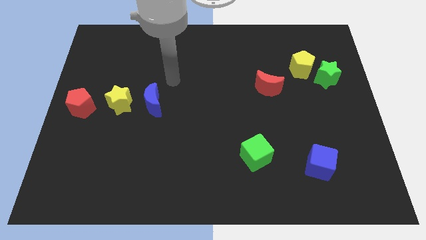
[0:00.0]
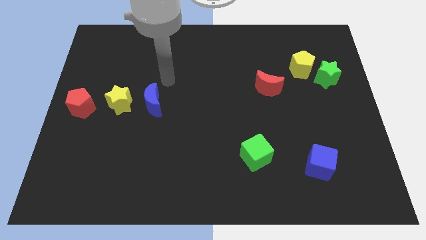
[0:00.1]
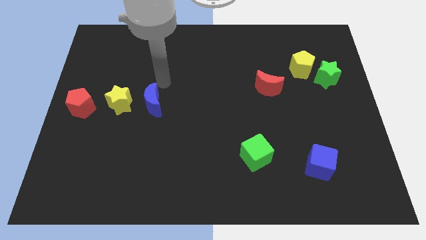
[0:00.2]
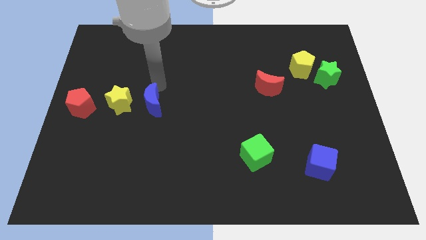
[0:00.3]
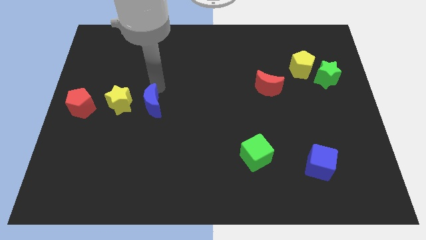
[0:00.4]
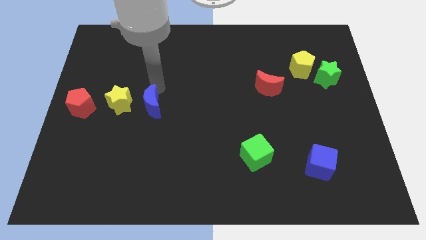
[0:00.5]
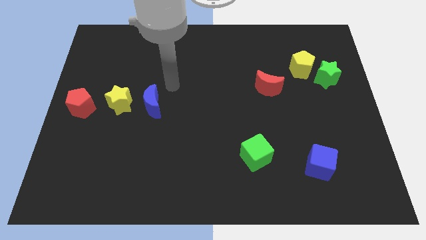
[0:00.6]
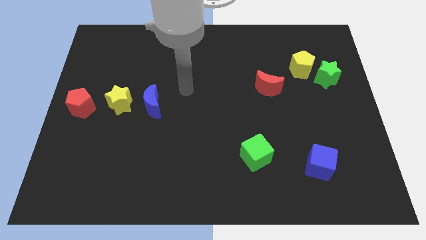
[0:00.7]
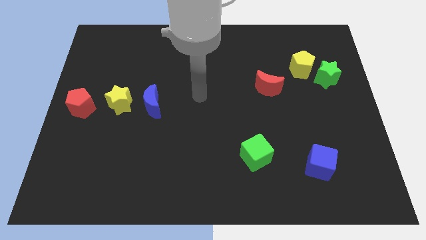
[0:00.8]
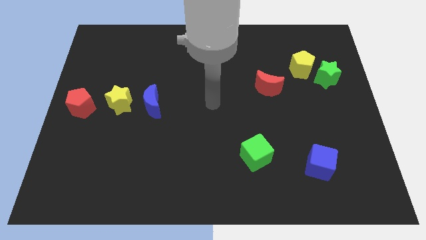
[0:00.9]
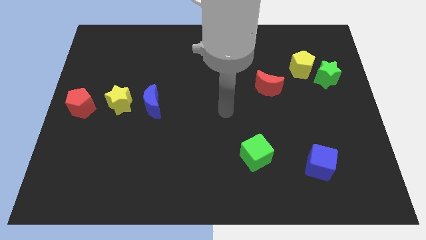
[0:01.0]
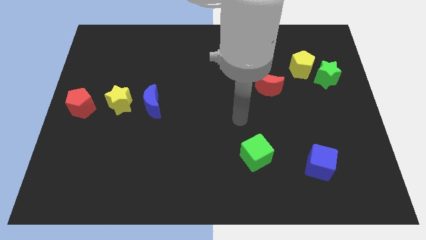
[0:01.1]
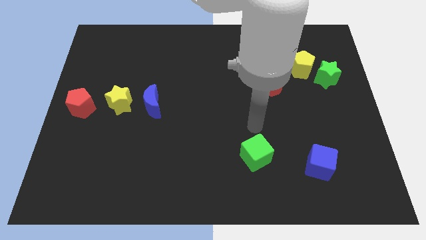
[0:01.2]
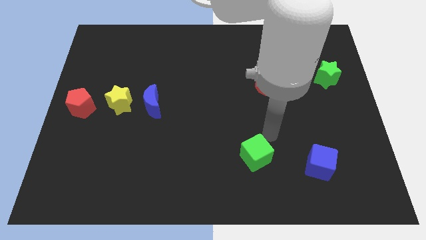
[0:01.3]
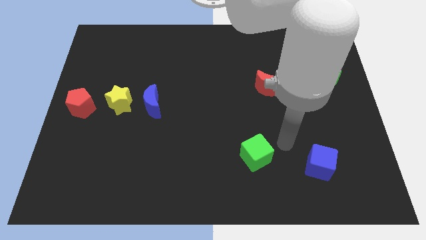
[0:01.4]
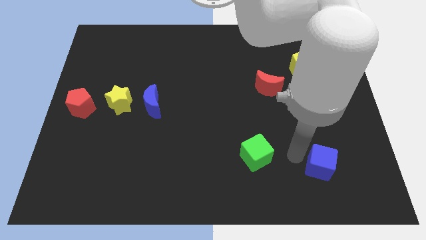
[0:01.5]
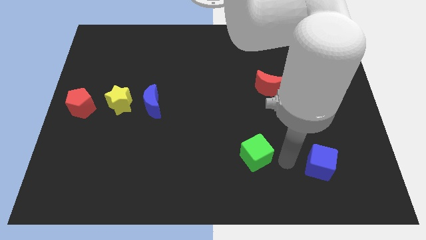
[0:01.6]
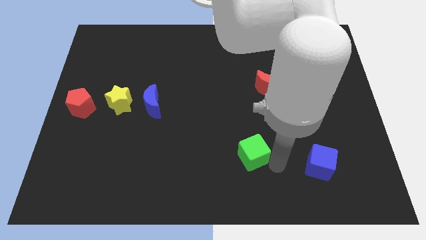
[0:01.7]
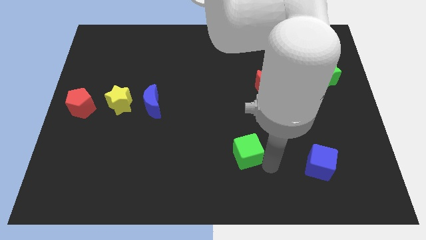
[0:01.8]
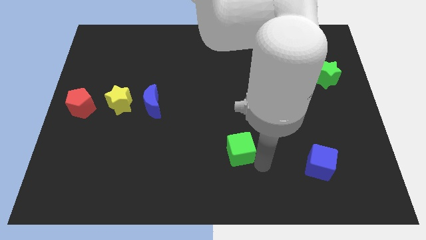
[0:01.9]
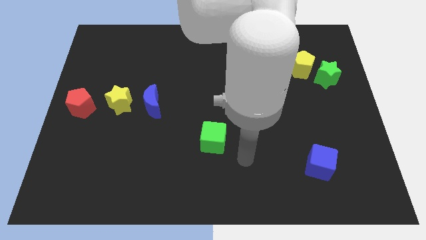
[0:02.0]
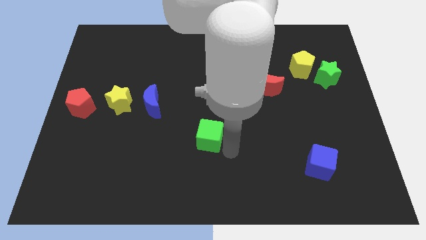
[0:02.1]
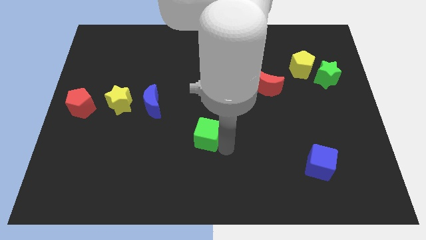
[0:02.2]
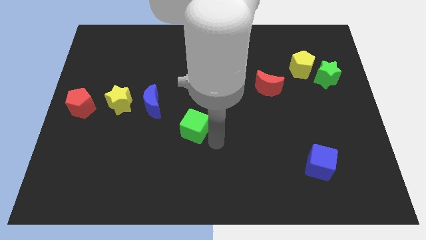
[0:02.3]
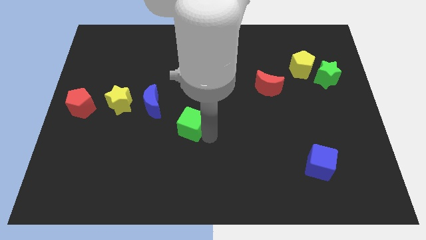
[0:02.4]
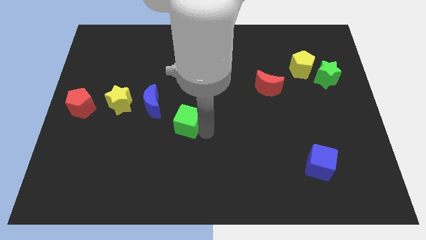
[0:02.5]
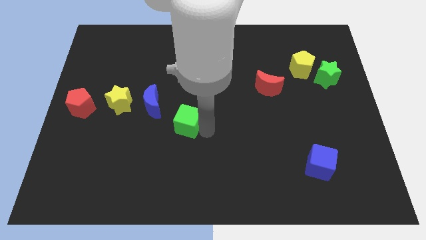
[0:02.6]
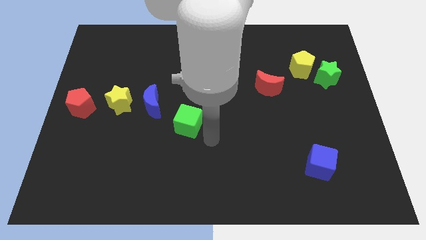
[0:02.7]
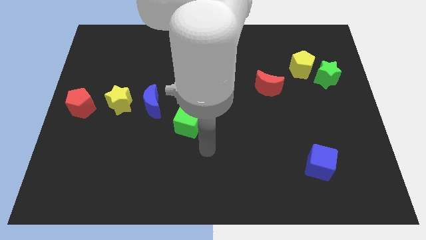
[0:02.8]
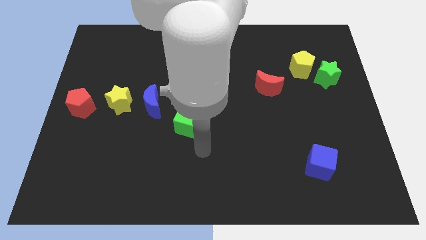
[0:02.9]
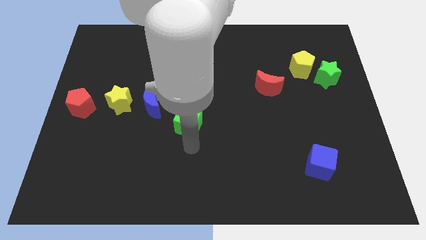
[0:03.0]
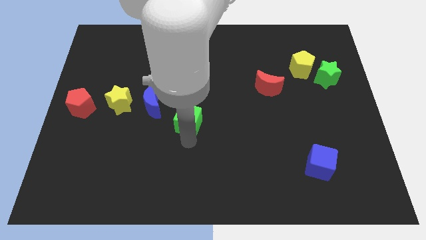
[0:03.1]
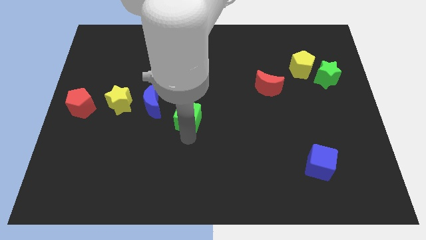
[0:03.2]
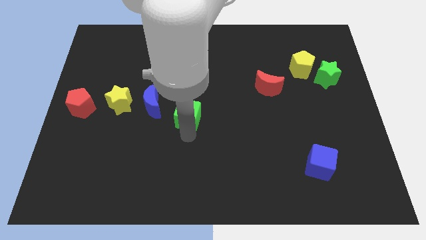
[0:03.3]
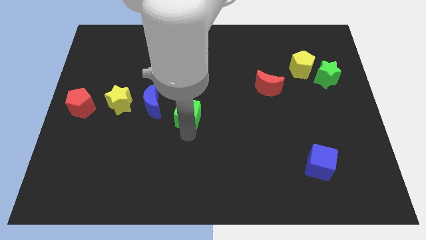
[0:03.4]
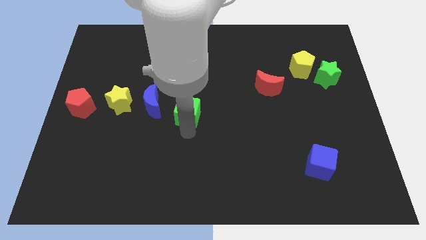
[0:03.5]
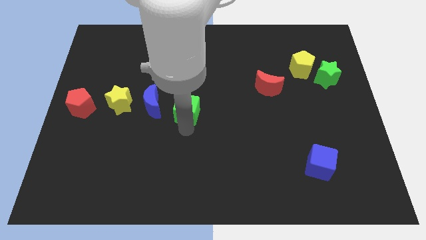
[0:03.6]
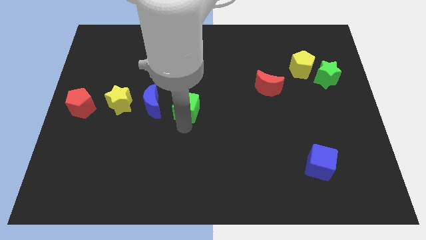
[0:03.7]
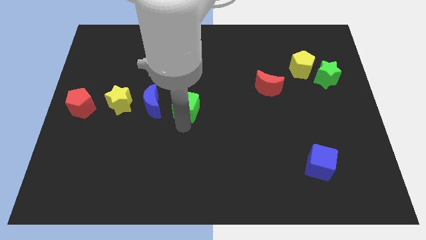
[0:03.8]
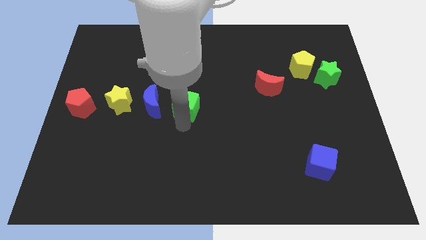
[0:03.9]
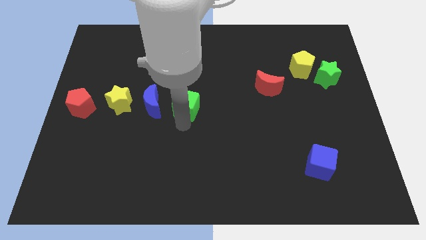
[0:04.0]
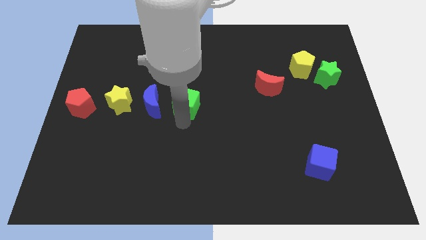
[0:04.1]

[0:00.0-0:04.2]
place the green cube in a horizontal line of blocks

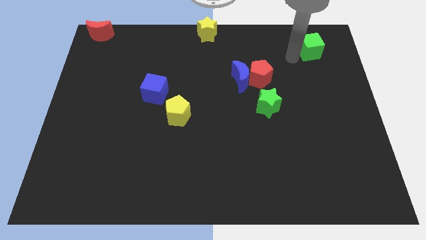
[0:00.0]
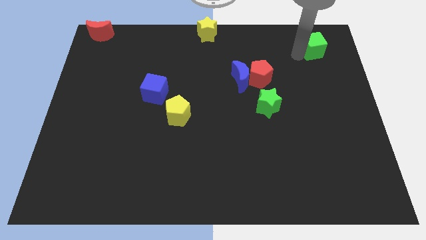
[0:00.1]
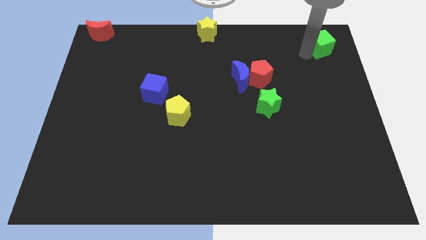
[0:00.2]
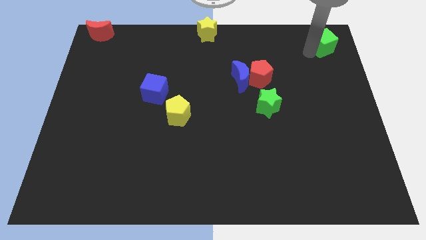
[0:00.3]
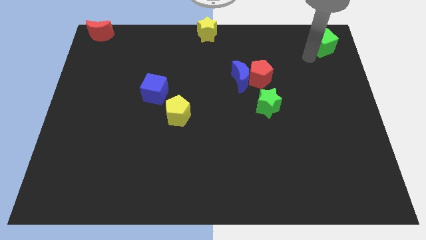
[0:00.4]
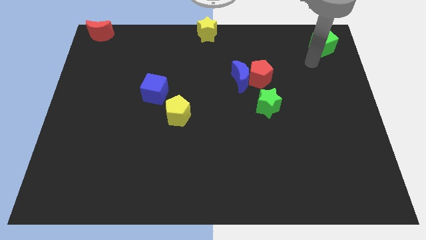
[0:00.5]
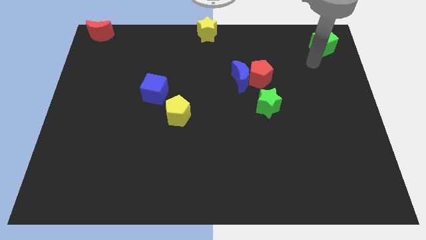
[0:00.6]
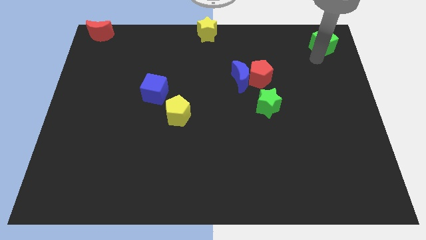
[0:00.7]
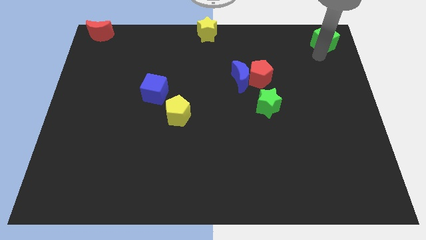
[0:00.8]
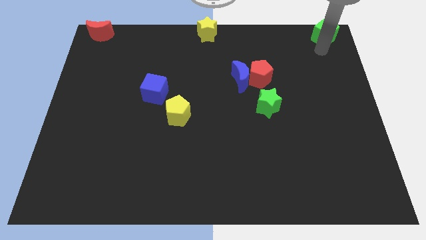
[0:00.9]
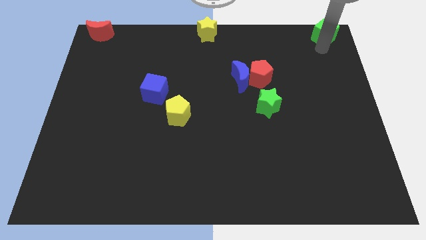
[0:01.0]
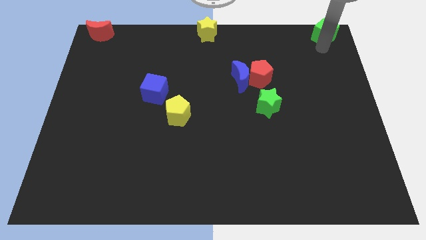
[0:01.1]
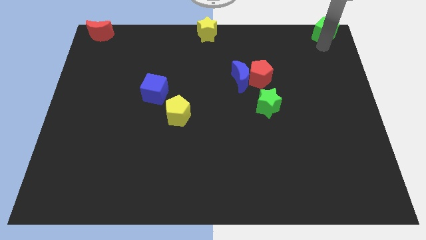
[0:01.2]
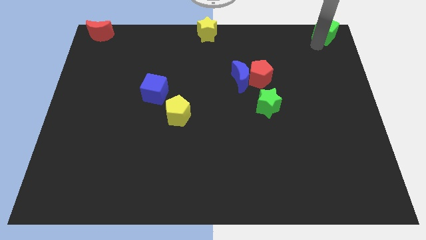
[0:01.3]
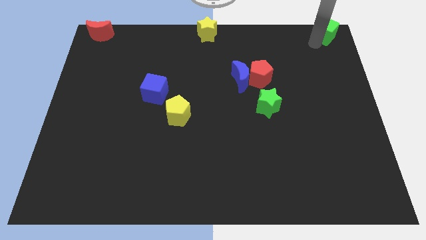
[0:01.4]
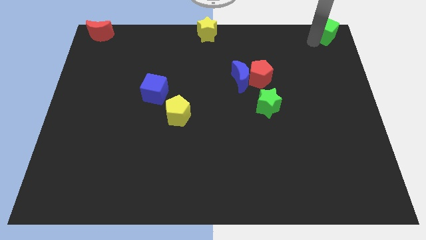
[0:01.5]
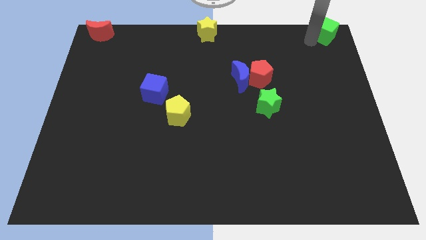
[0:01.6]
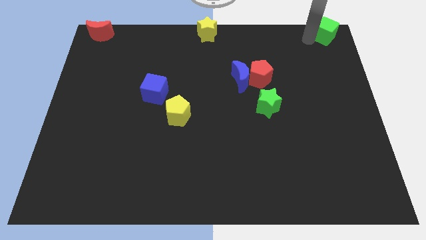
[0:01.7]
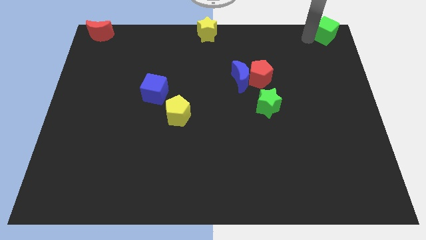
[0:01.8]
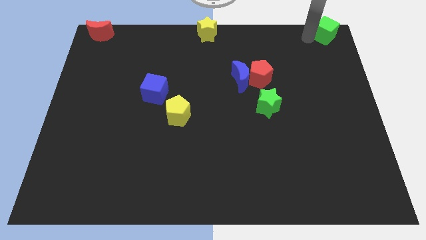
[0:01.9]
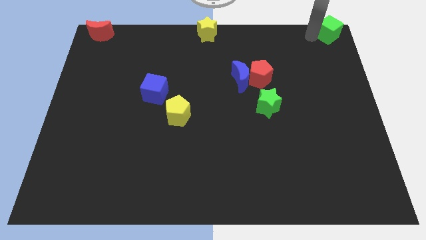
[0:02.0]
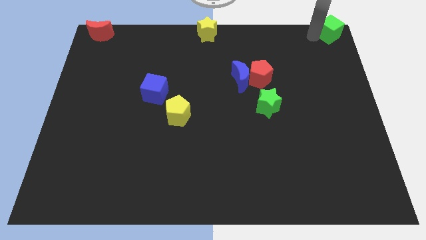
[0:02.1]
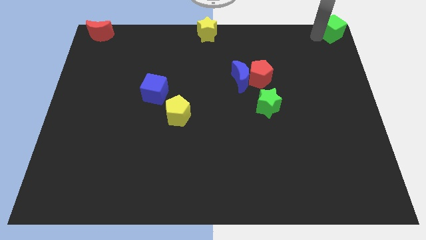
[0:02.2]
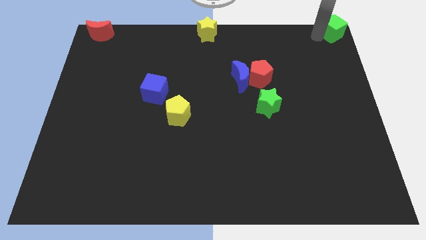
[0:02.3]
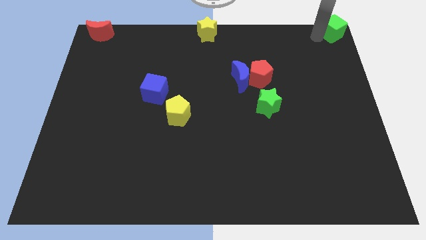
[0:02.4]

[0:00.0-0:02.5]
push the green cube to the top right corner of the board

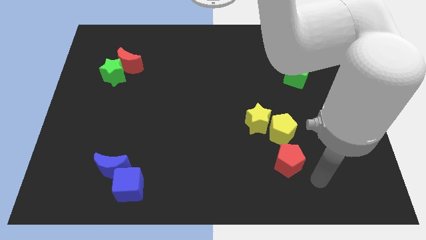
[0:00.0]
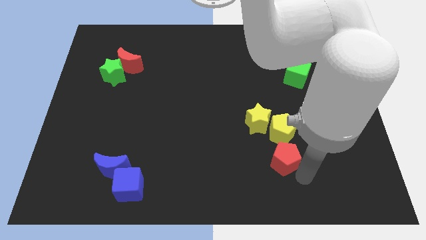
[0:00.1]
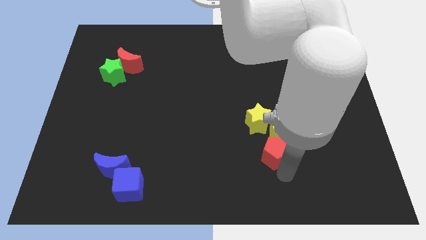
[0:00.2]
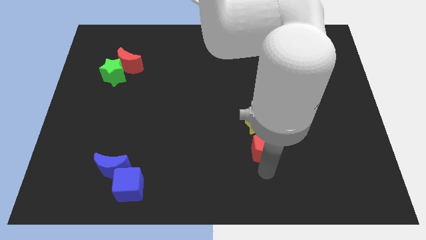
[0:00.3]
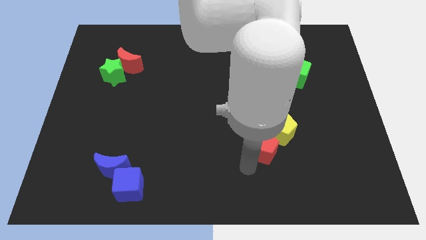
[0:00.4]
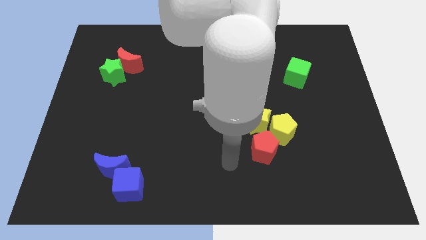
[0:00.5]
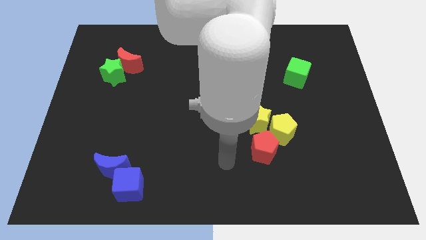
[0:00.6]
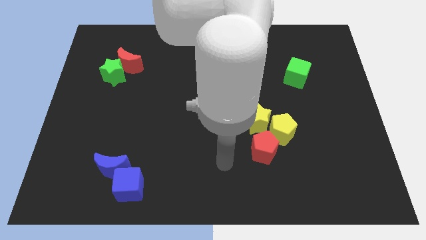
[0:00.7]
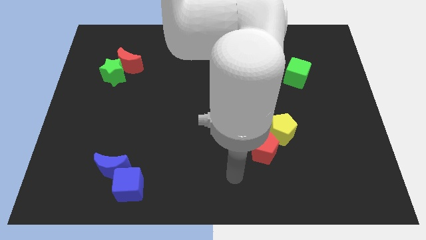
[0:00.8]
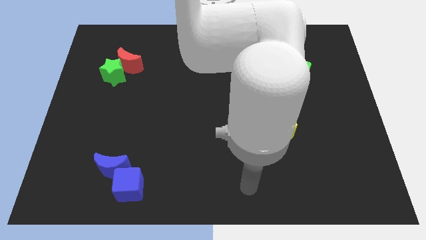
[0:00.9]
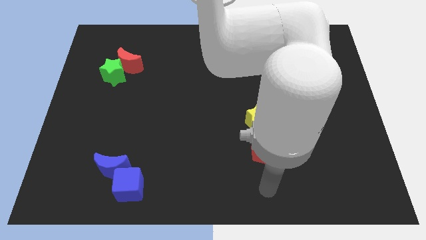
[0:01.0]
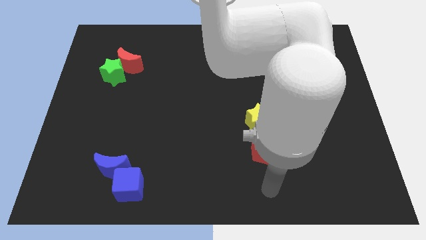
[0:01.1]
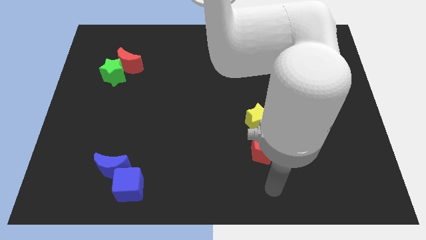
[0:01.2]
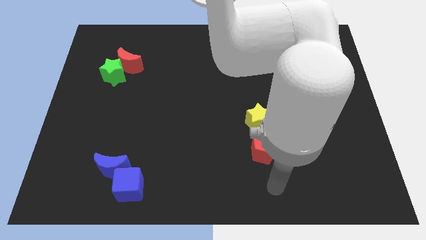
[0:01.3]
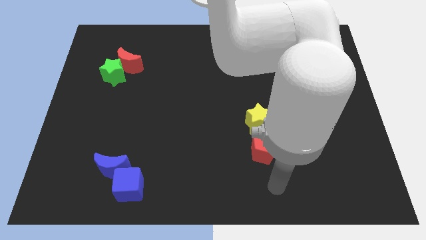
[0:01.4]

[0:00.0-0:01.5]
push the red pentagon towards the yellow blocks

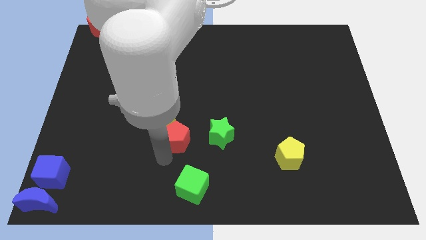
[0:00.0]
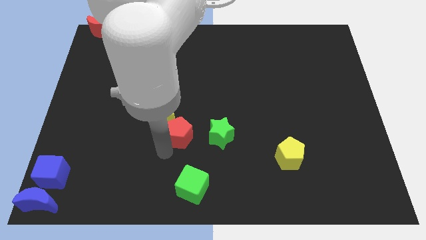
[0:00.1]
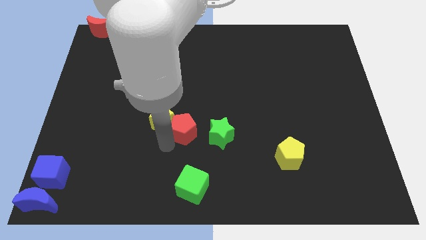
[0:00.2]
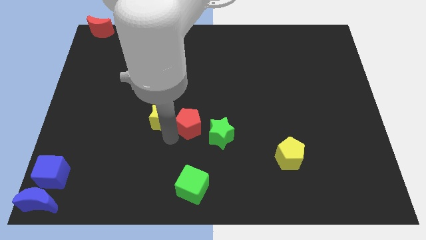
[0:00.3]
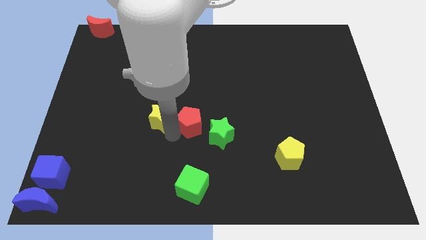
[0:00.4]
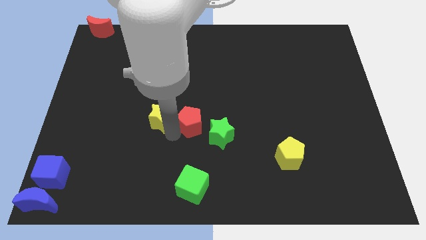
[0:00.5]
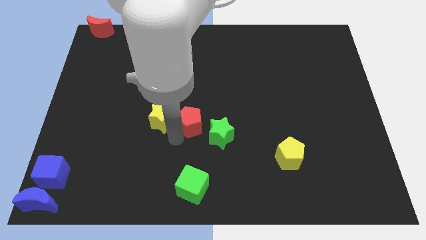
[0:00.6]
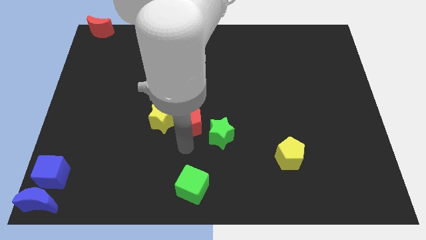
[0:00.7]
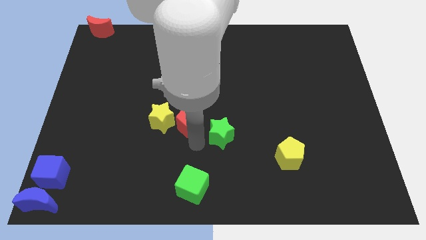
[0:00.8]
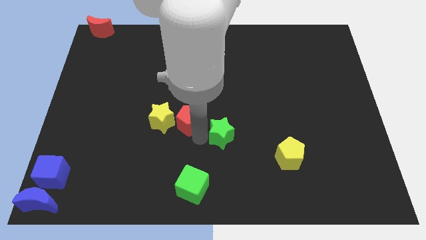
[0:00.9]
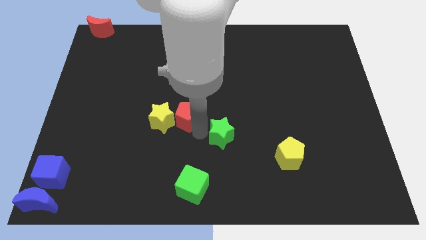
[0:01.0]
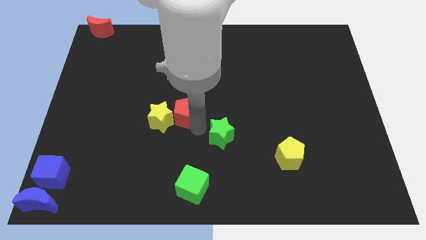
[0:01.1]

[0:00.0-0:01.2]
move the red pentagon parallel right to the yellow star
